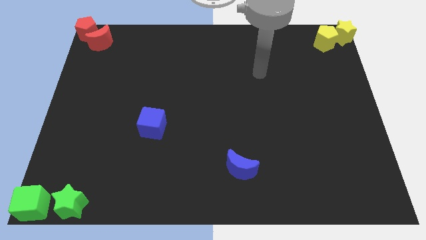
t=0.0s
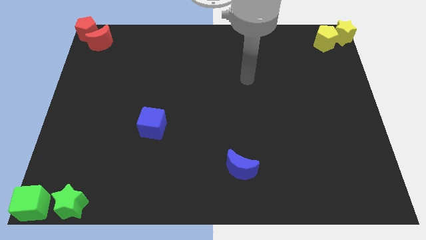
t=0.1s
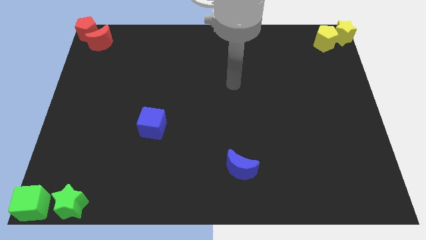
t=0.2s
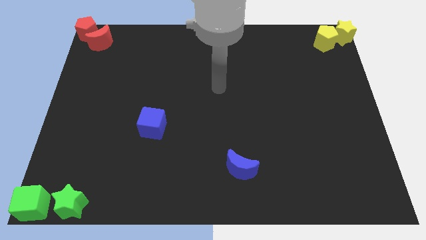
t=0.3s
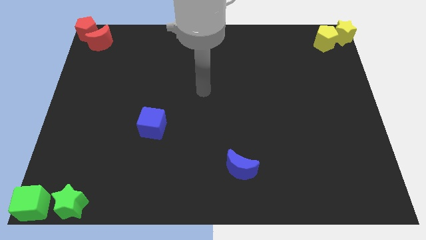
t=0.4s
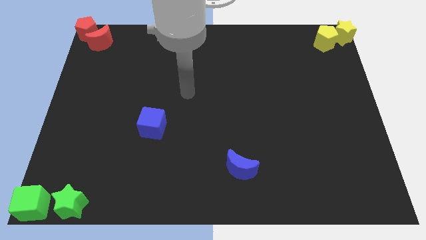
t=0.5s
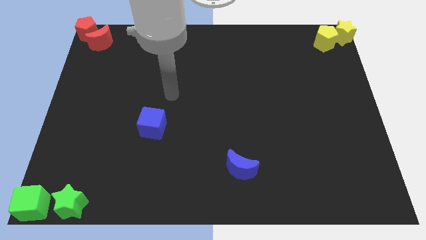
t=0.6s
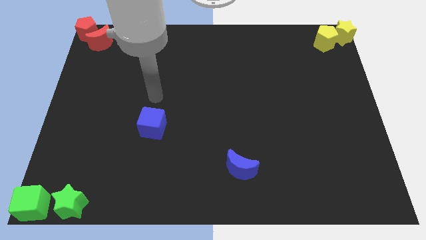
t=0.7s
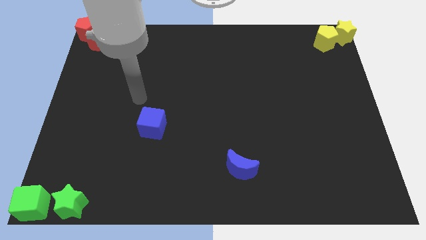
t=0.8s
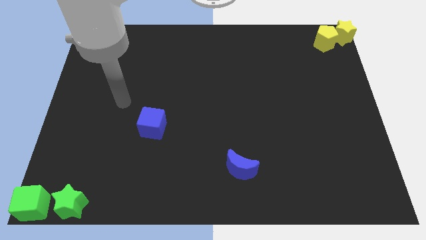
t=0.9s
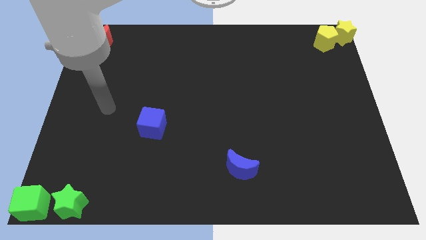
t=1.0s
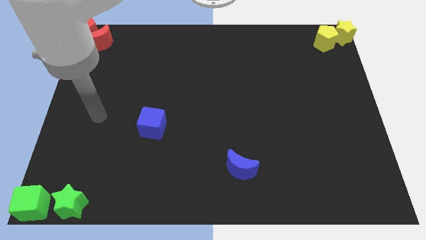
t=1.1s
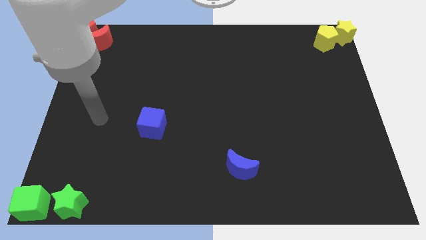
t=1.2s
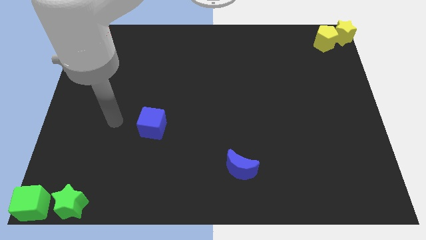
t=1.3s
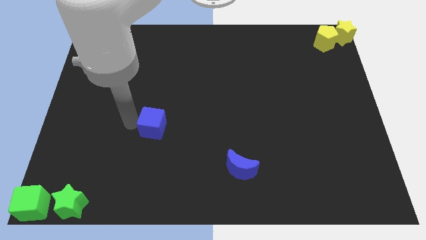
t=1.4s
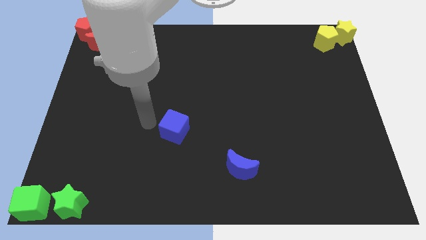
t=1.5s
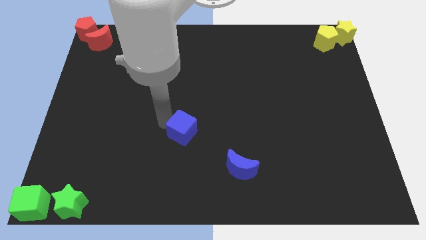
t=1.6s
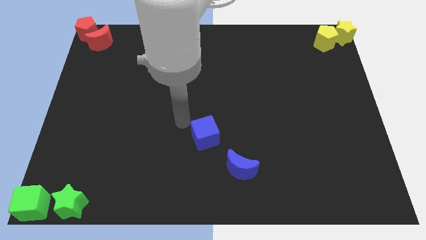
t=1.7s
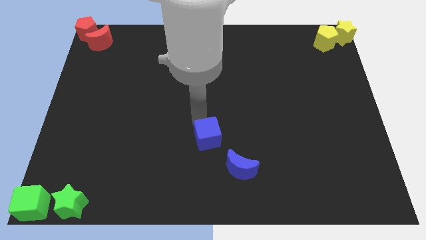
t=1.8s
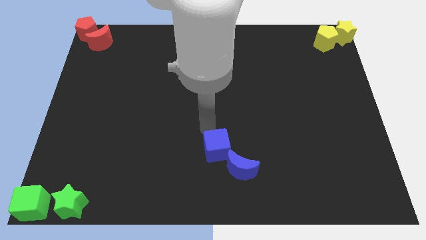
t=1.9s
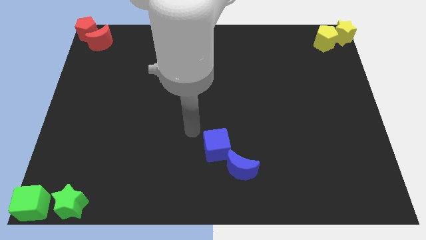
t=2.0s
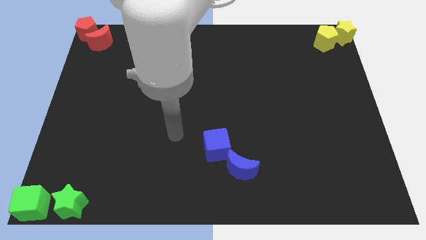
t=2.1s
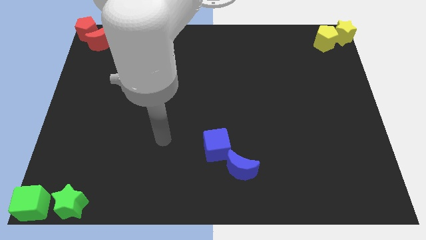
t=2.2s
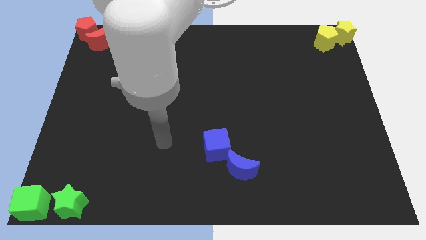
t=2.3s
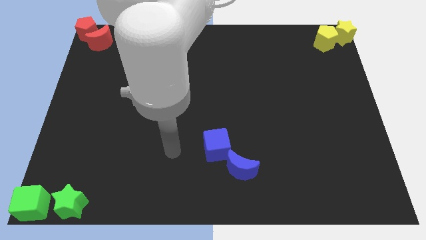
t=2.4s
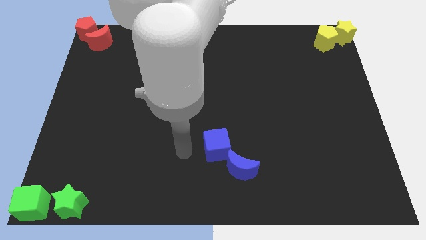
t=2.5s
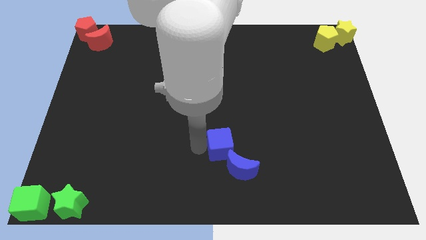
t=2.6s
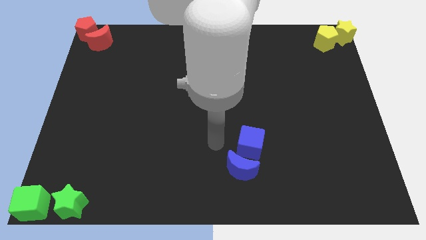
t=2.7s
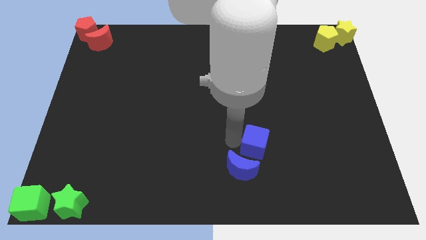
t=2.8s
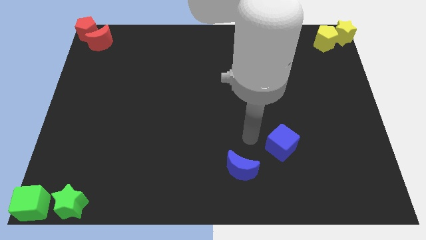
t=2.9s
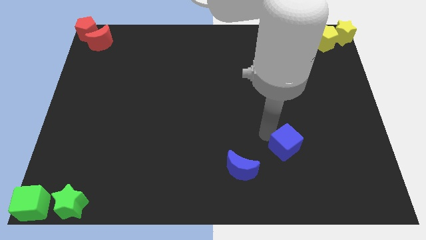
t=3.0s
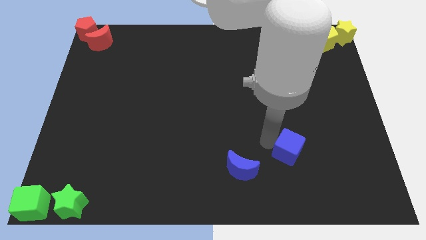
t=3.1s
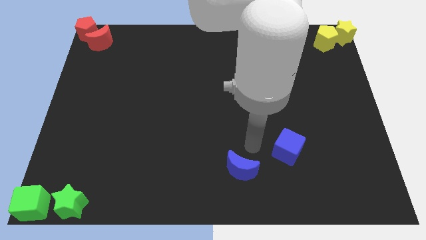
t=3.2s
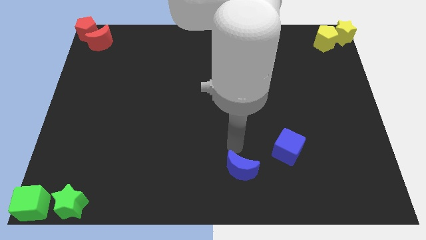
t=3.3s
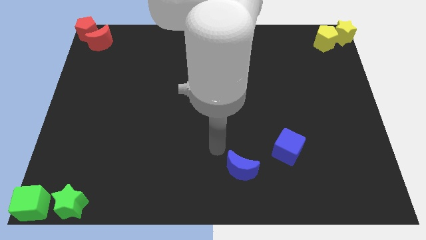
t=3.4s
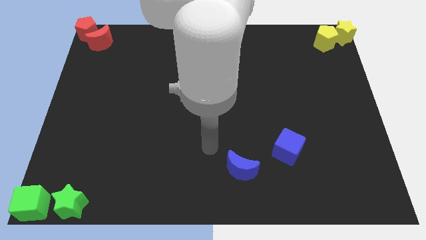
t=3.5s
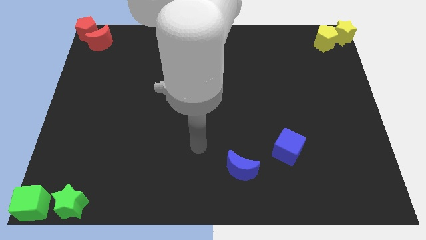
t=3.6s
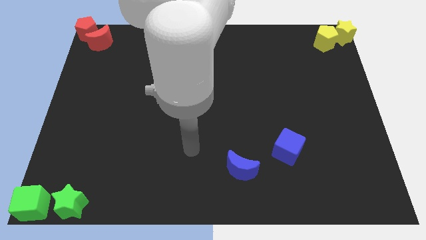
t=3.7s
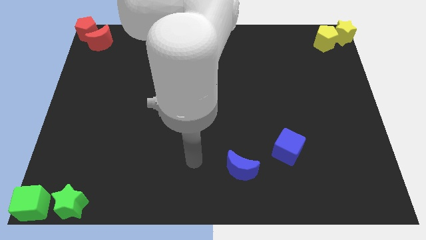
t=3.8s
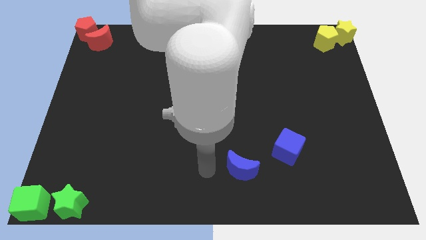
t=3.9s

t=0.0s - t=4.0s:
move the blue cube to the top right of the blue crescent

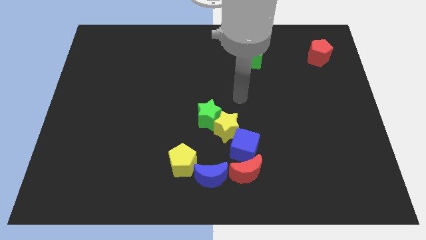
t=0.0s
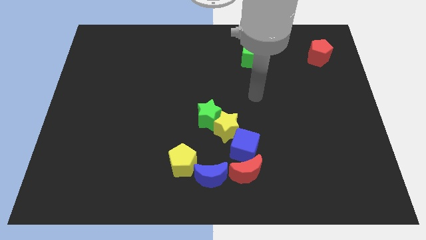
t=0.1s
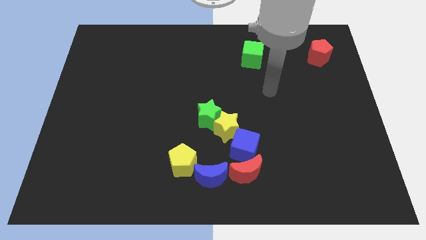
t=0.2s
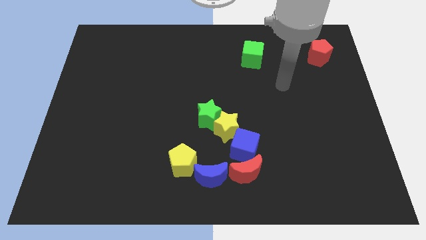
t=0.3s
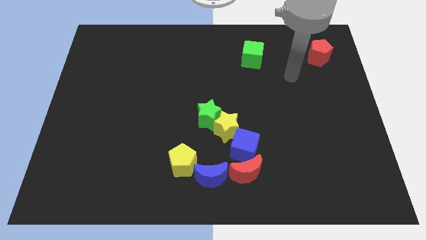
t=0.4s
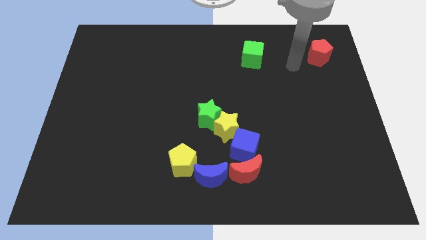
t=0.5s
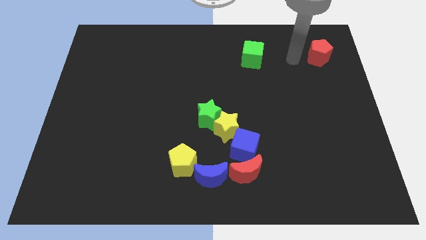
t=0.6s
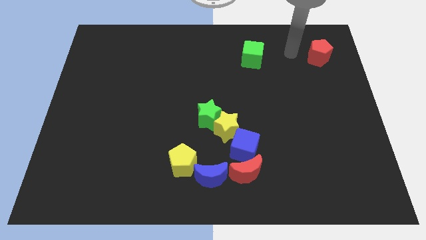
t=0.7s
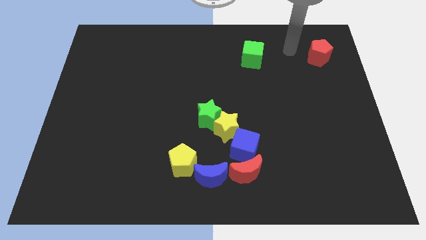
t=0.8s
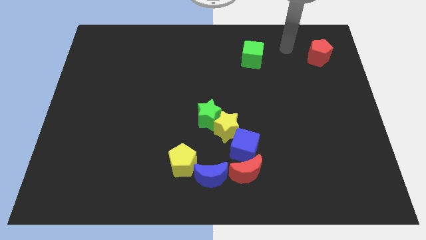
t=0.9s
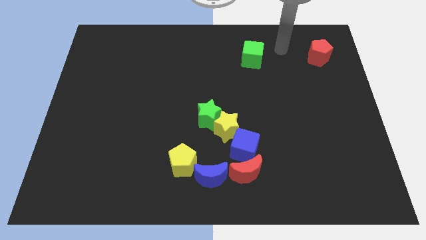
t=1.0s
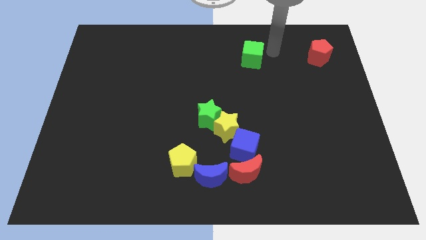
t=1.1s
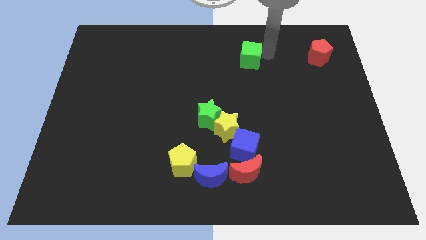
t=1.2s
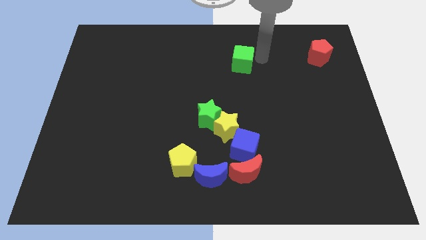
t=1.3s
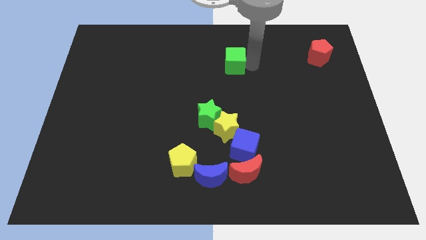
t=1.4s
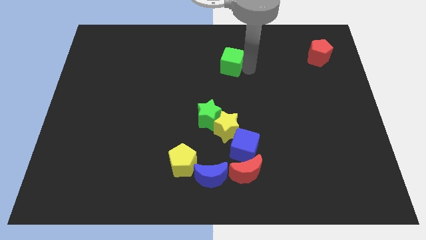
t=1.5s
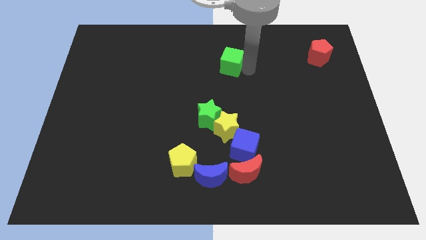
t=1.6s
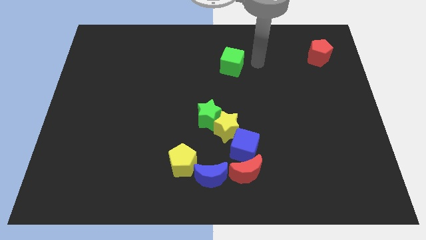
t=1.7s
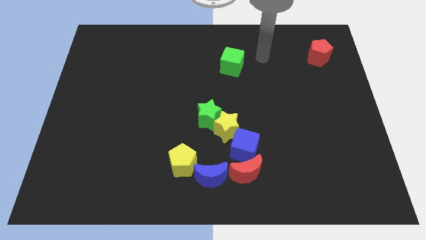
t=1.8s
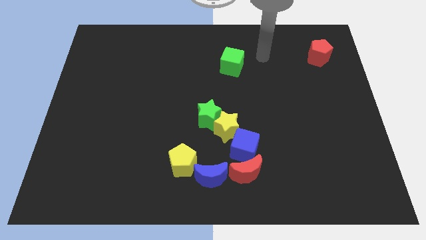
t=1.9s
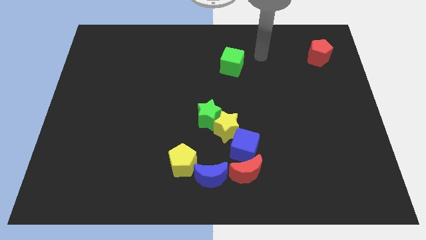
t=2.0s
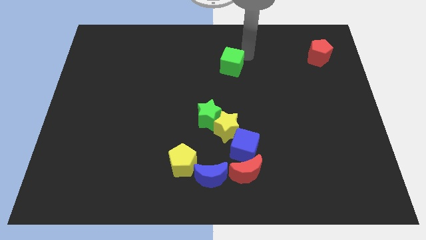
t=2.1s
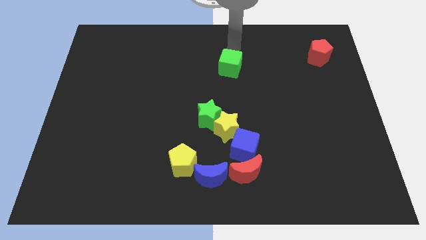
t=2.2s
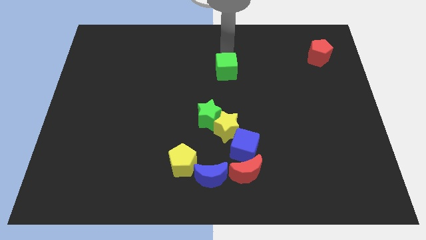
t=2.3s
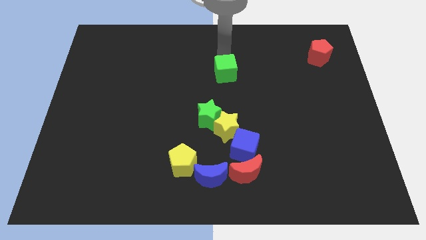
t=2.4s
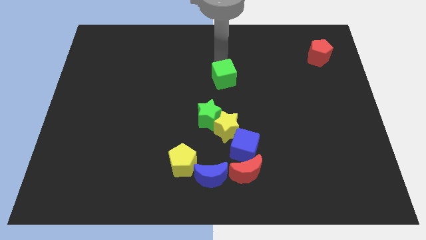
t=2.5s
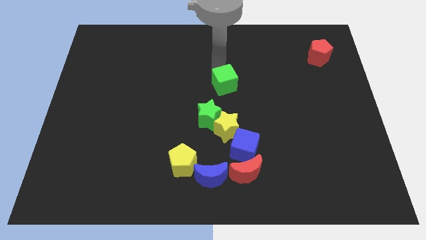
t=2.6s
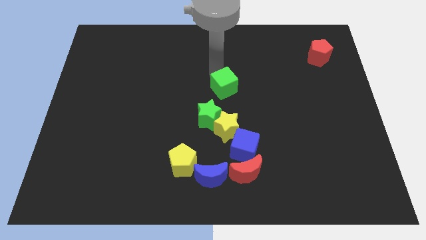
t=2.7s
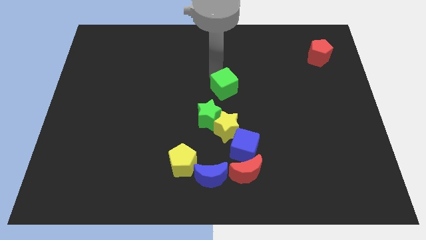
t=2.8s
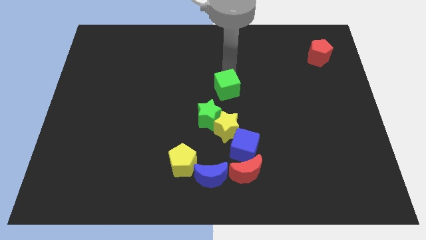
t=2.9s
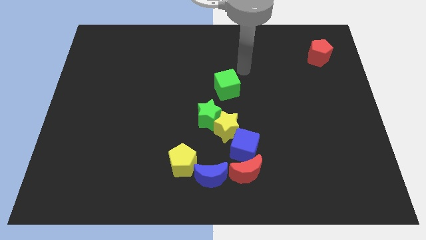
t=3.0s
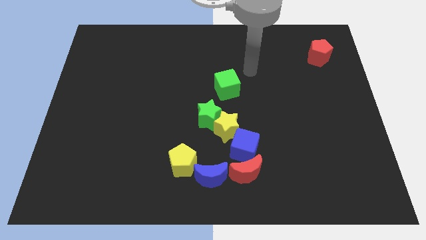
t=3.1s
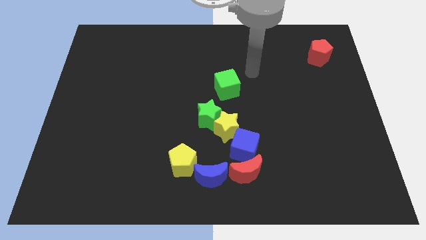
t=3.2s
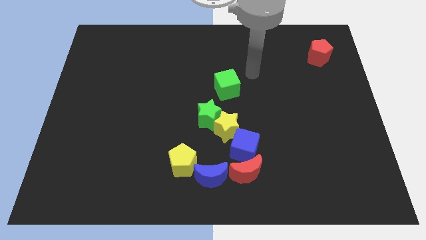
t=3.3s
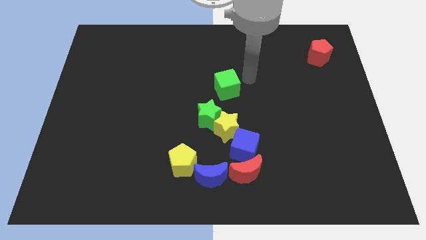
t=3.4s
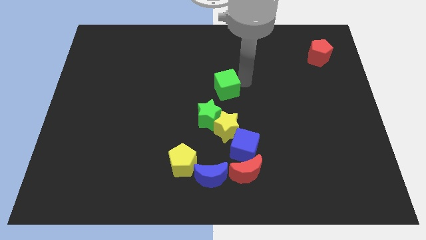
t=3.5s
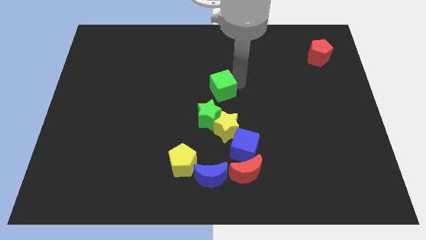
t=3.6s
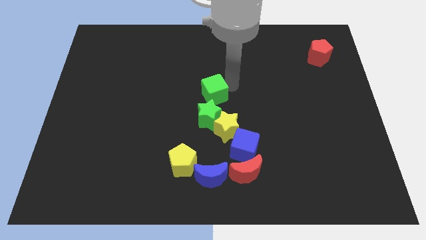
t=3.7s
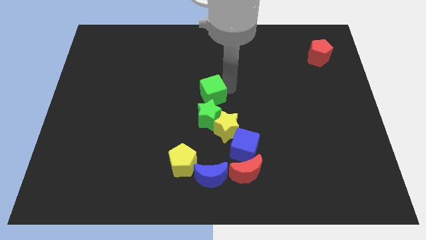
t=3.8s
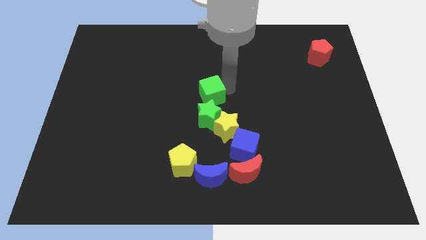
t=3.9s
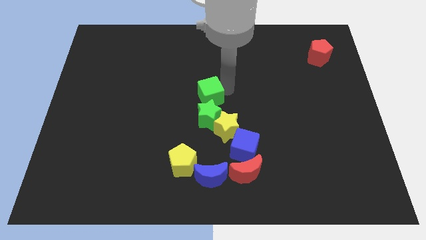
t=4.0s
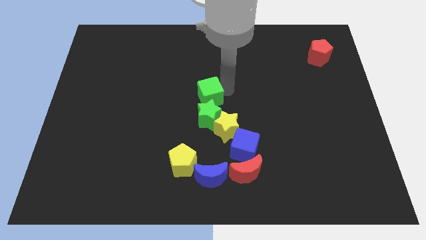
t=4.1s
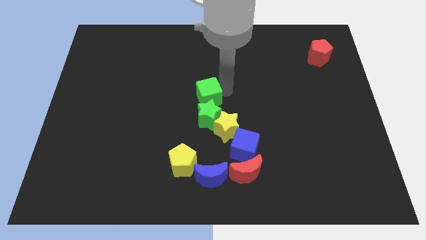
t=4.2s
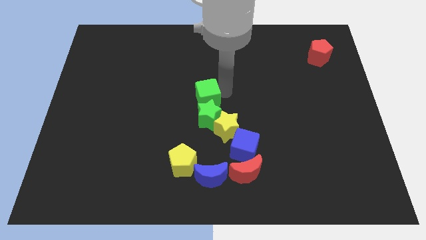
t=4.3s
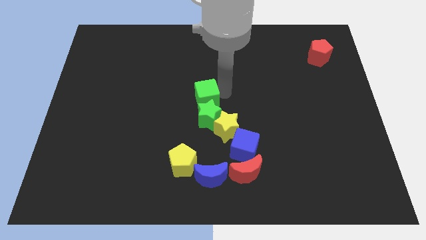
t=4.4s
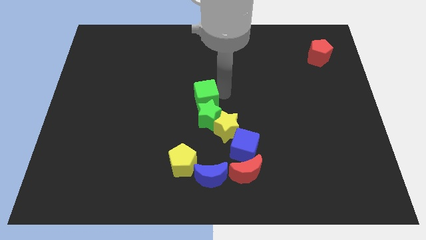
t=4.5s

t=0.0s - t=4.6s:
place the green cube above the green star

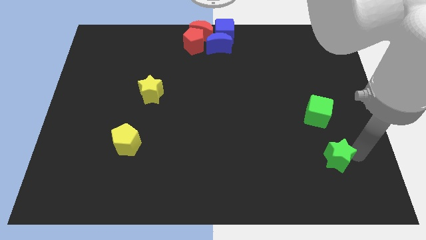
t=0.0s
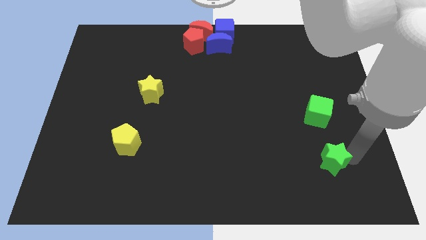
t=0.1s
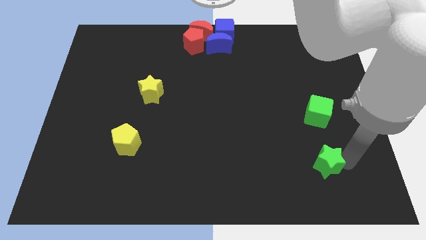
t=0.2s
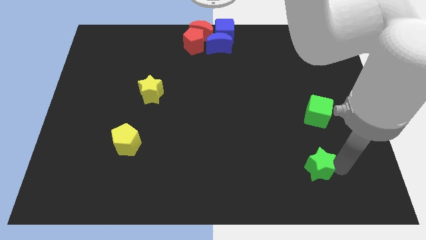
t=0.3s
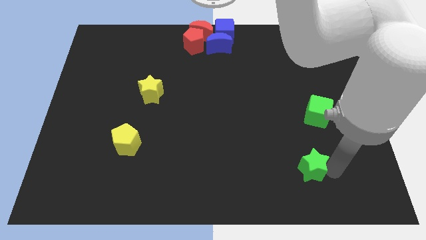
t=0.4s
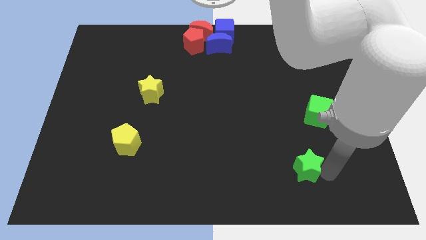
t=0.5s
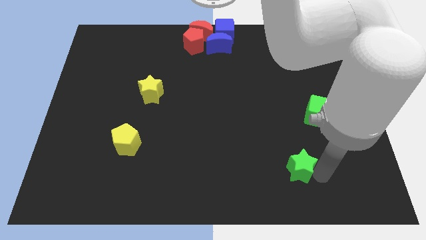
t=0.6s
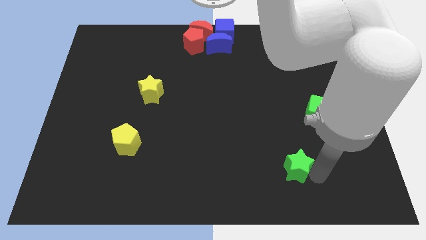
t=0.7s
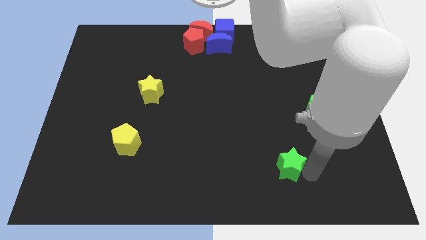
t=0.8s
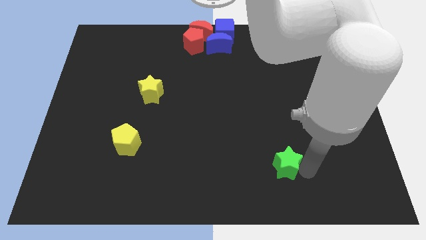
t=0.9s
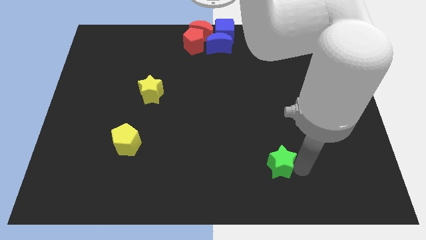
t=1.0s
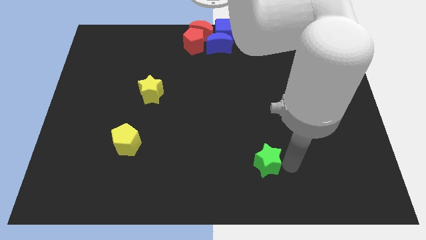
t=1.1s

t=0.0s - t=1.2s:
push green star diagonally bottom left of the green cube
